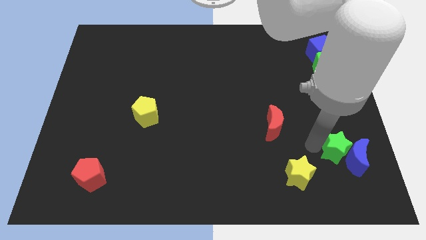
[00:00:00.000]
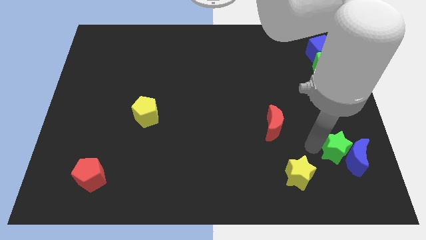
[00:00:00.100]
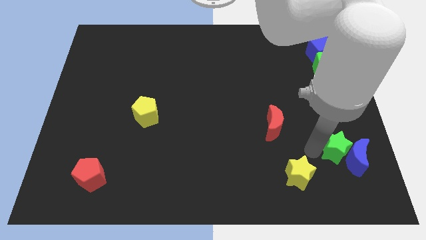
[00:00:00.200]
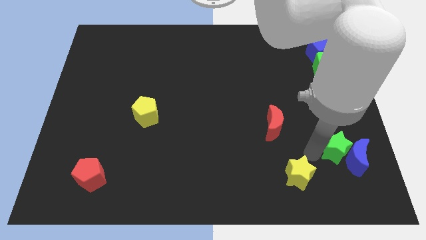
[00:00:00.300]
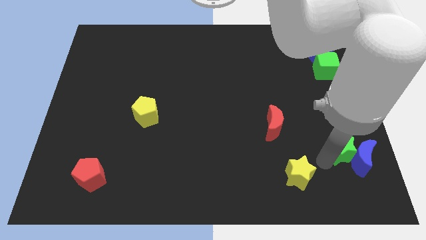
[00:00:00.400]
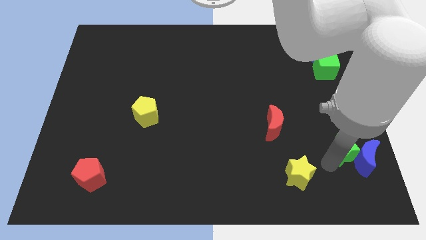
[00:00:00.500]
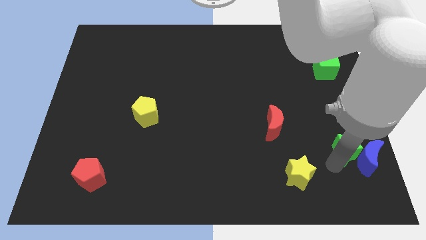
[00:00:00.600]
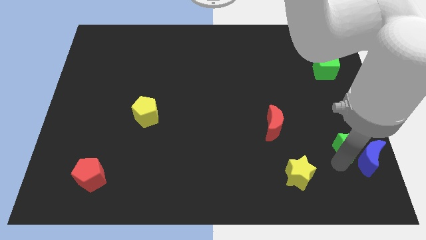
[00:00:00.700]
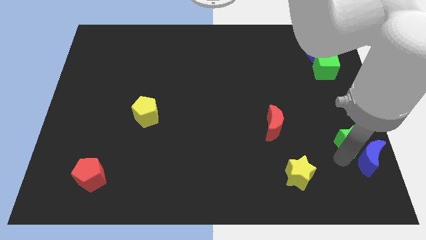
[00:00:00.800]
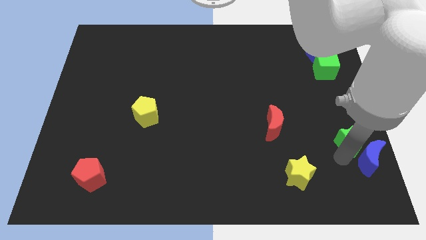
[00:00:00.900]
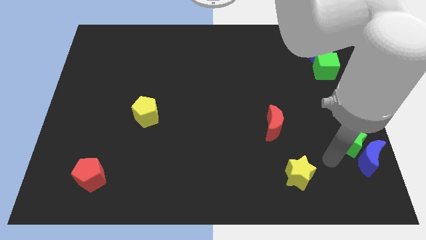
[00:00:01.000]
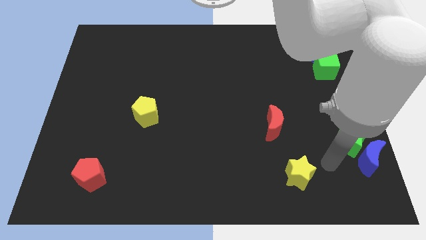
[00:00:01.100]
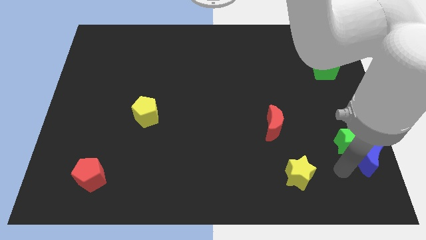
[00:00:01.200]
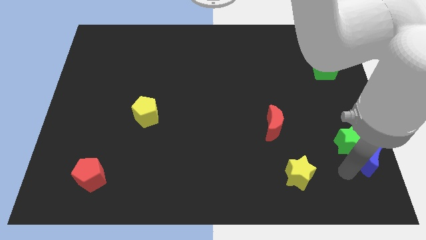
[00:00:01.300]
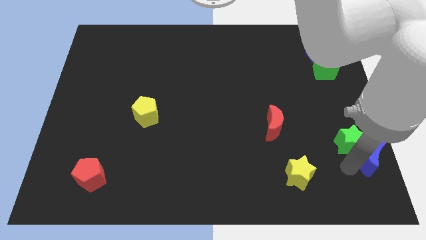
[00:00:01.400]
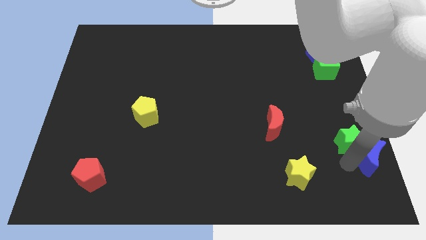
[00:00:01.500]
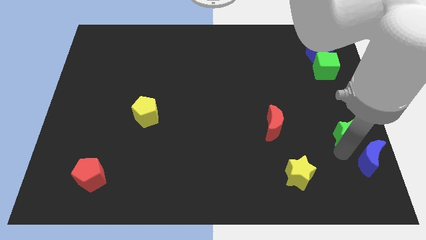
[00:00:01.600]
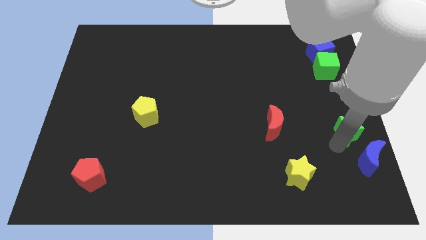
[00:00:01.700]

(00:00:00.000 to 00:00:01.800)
separate the green star from the blue crescent

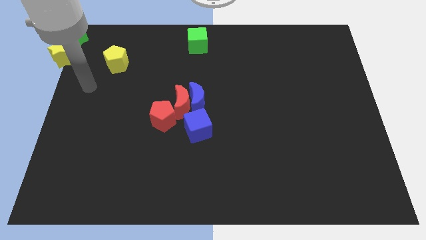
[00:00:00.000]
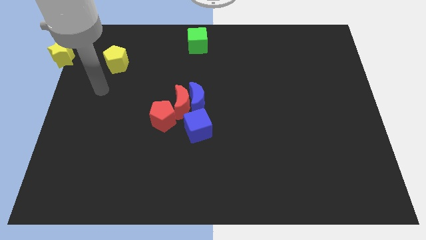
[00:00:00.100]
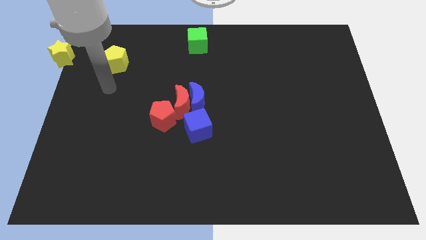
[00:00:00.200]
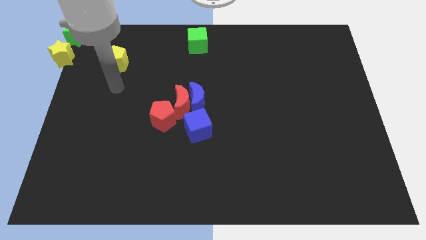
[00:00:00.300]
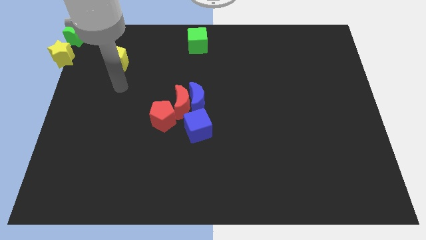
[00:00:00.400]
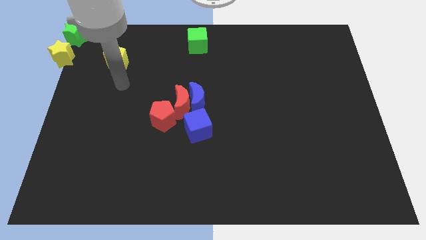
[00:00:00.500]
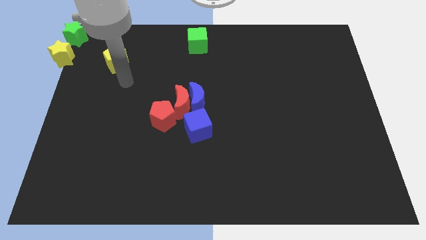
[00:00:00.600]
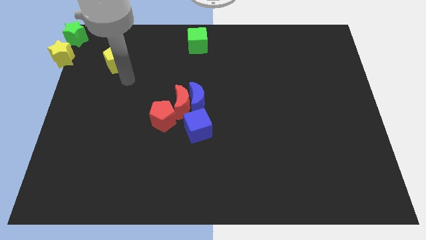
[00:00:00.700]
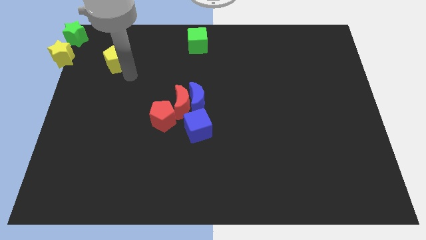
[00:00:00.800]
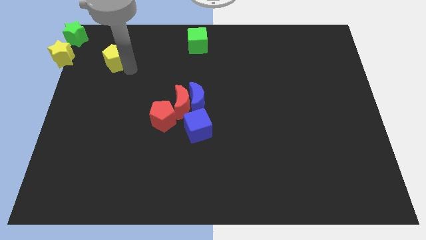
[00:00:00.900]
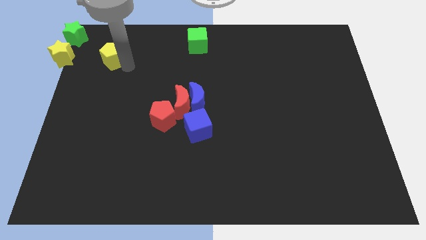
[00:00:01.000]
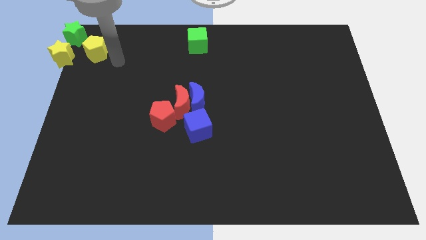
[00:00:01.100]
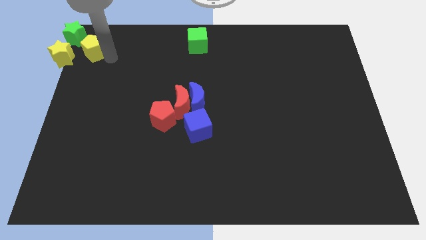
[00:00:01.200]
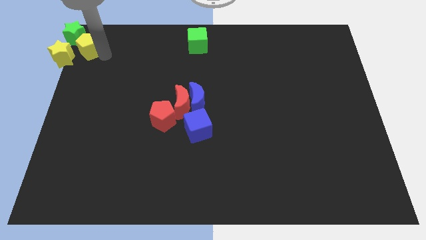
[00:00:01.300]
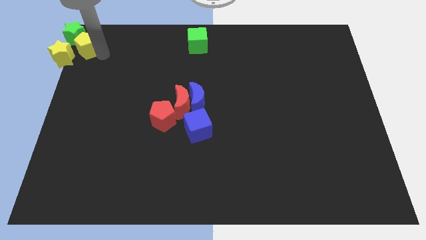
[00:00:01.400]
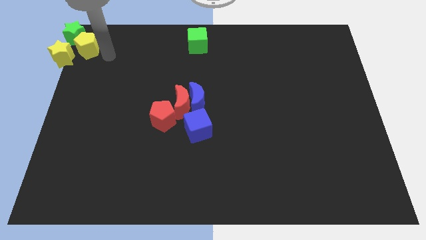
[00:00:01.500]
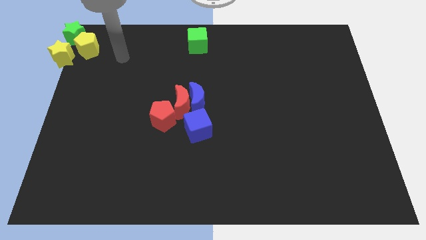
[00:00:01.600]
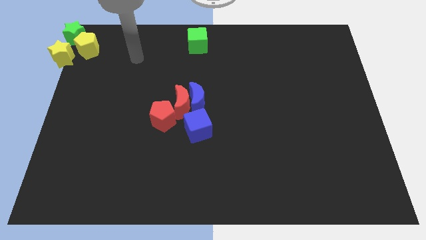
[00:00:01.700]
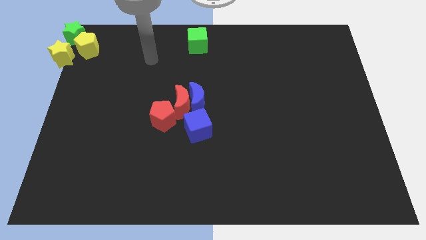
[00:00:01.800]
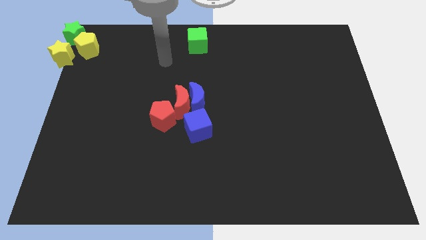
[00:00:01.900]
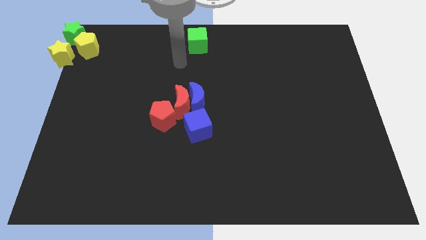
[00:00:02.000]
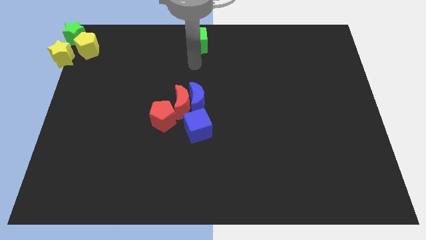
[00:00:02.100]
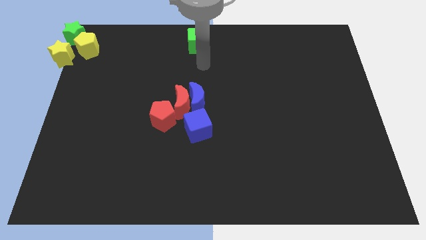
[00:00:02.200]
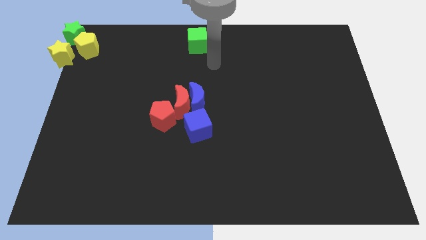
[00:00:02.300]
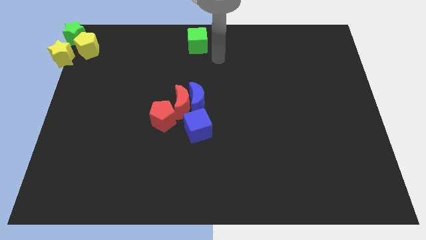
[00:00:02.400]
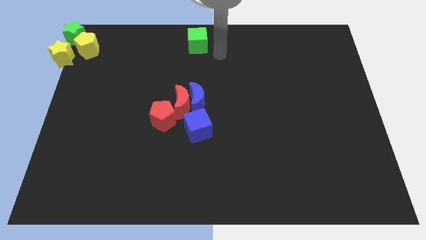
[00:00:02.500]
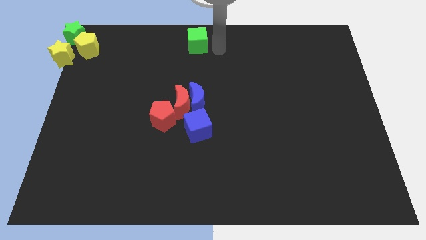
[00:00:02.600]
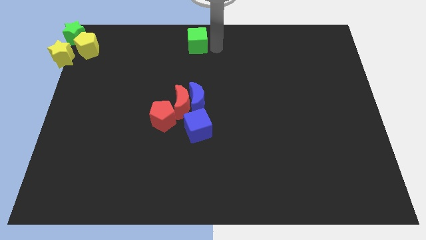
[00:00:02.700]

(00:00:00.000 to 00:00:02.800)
push the yellow pentagon to the right of the yellow star

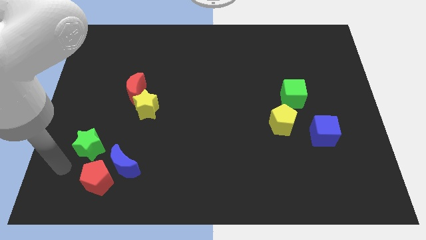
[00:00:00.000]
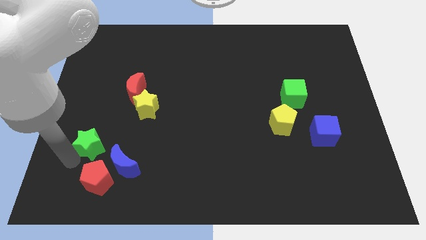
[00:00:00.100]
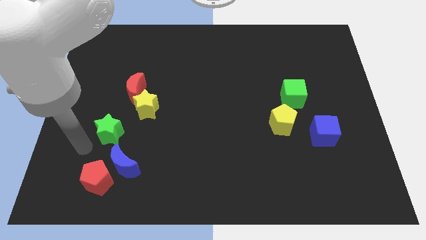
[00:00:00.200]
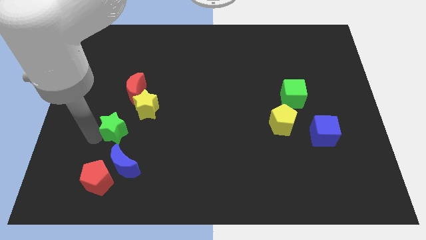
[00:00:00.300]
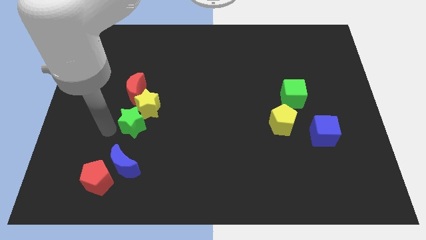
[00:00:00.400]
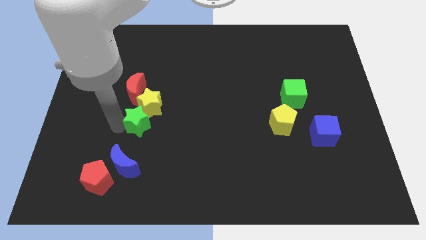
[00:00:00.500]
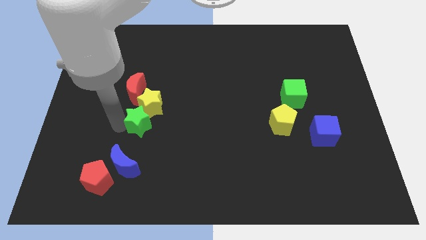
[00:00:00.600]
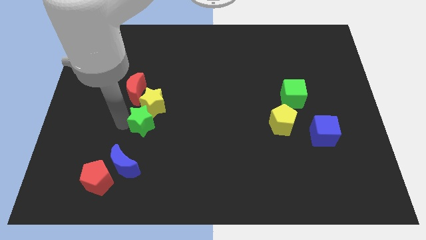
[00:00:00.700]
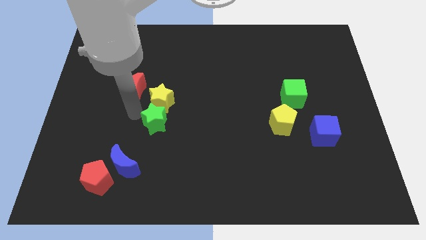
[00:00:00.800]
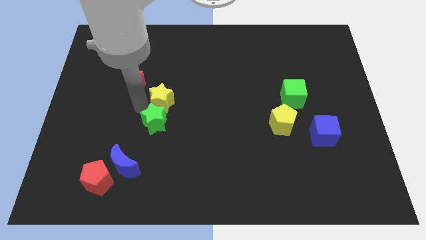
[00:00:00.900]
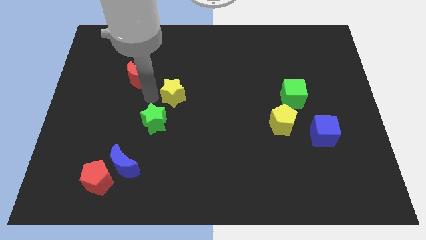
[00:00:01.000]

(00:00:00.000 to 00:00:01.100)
push the yellow star with the green star

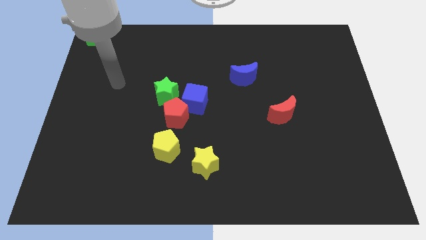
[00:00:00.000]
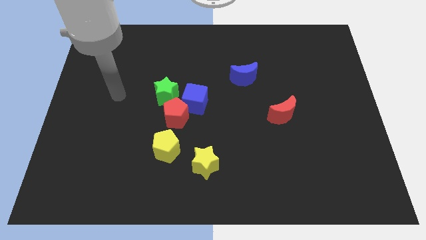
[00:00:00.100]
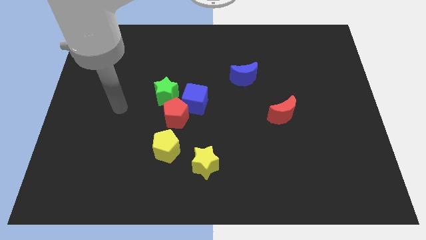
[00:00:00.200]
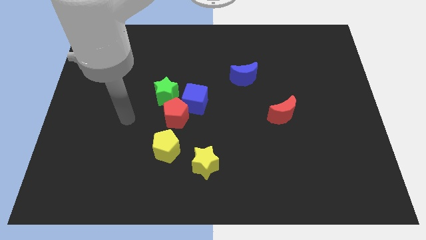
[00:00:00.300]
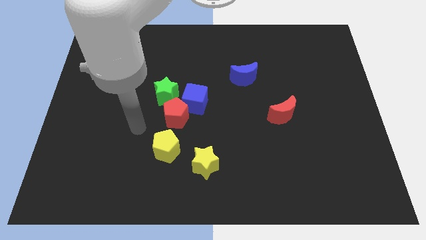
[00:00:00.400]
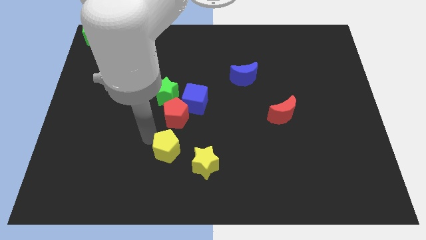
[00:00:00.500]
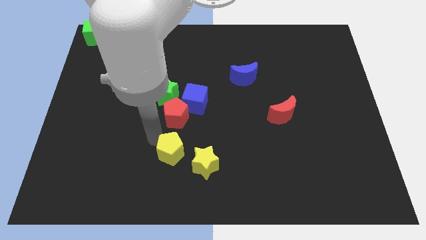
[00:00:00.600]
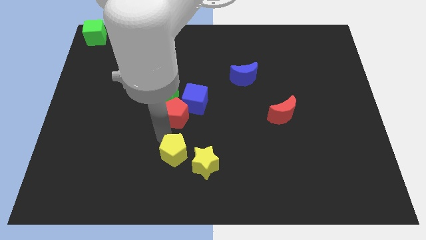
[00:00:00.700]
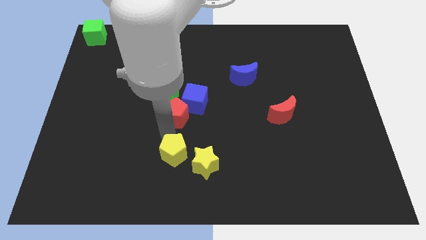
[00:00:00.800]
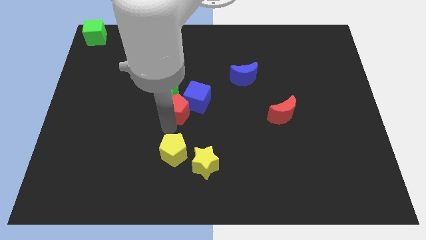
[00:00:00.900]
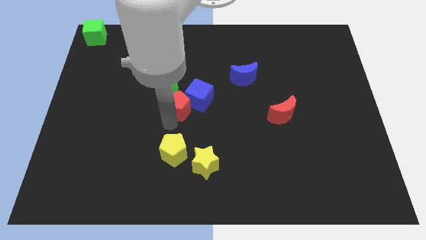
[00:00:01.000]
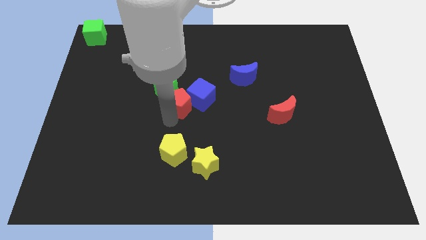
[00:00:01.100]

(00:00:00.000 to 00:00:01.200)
move the yellow pentagon slightly to the yellow star

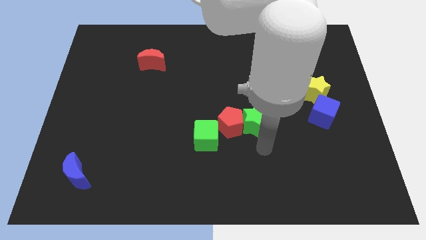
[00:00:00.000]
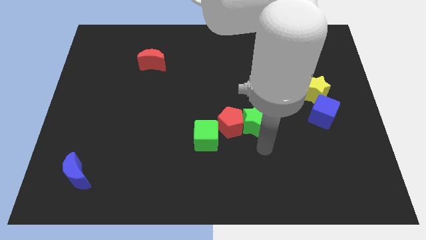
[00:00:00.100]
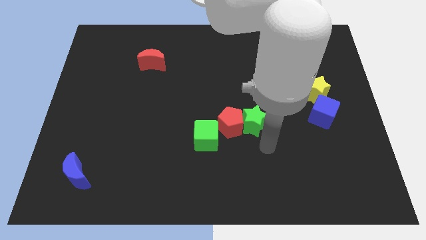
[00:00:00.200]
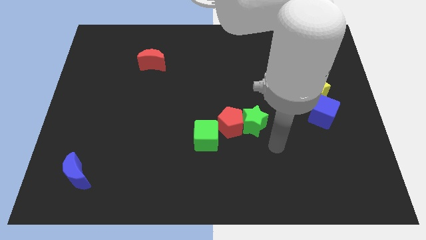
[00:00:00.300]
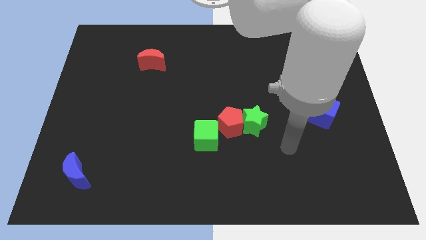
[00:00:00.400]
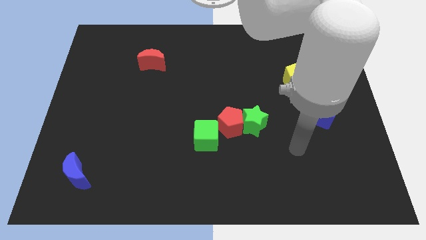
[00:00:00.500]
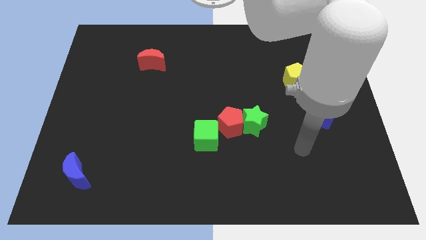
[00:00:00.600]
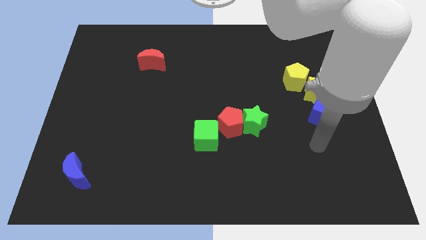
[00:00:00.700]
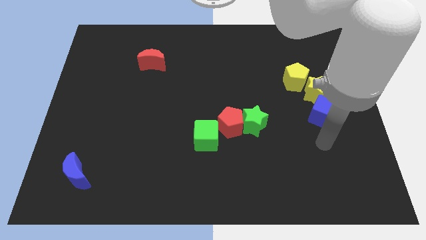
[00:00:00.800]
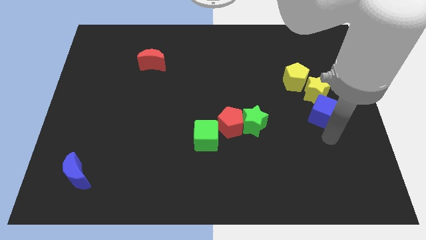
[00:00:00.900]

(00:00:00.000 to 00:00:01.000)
point your arm at the bottom of blue cube

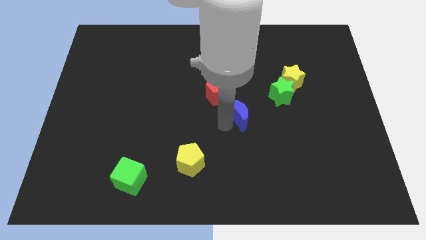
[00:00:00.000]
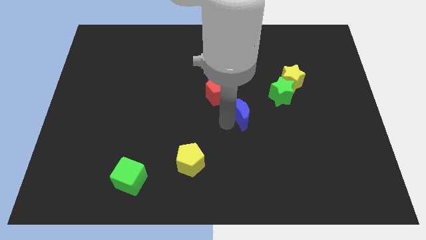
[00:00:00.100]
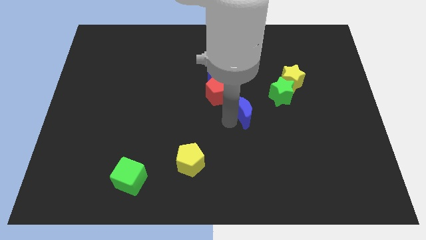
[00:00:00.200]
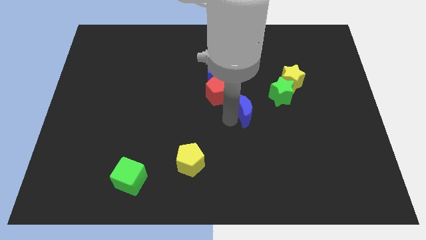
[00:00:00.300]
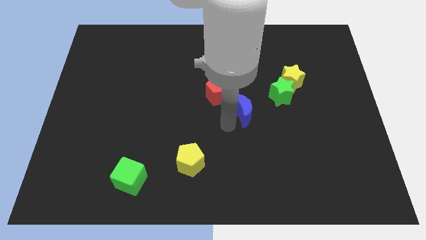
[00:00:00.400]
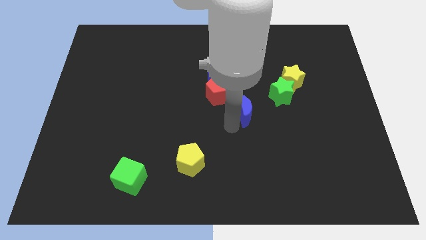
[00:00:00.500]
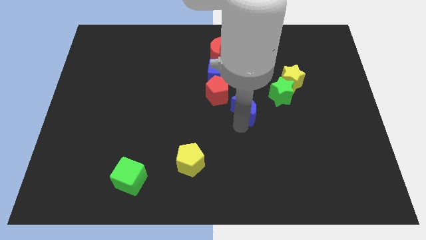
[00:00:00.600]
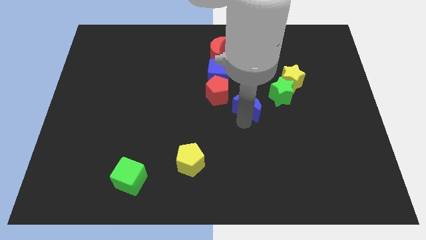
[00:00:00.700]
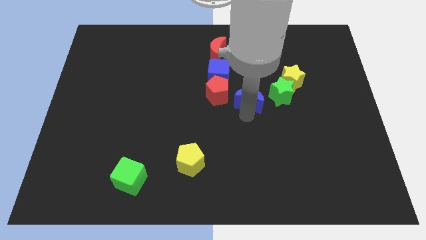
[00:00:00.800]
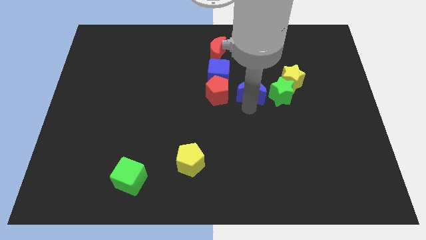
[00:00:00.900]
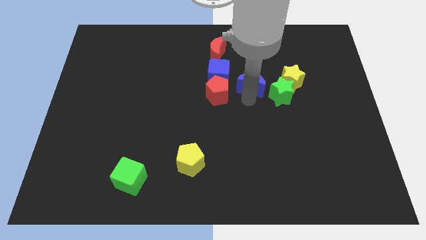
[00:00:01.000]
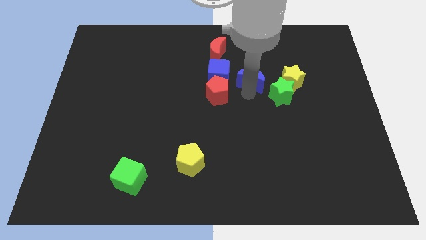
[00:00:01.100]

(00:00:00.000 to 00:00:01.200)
put the blue moon right to the red pentagon
